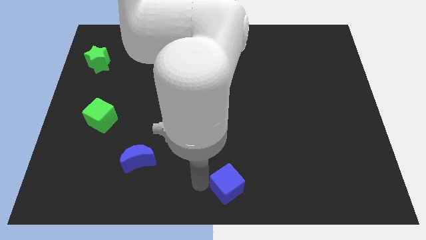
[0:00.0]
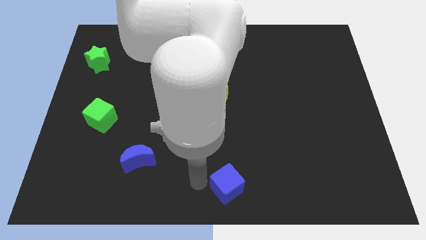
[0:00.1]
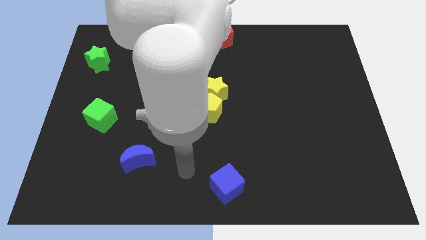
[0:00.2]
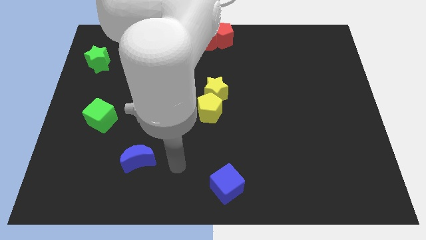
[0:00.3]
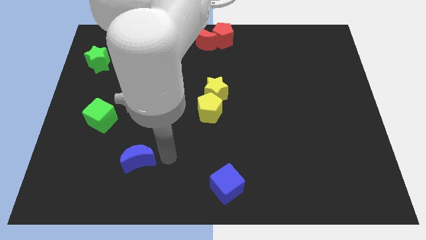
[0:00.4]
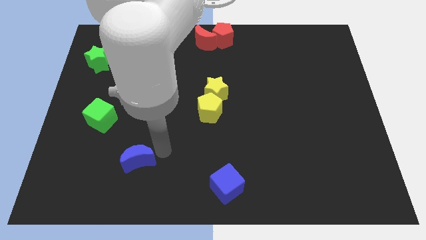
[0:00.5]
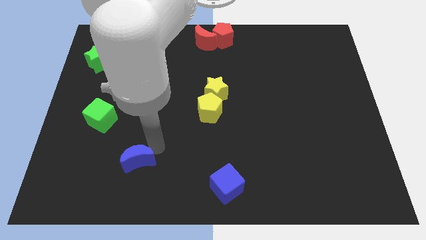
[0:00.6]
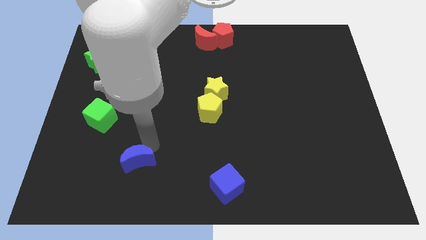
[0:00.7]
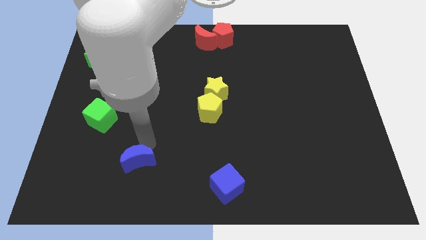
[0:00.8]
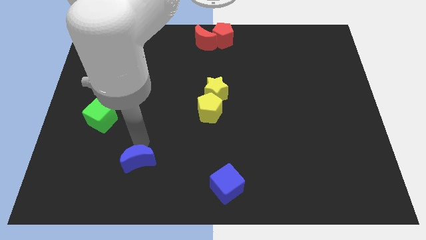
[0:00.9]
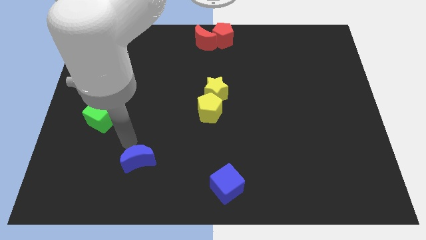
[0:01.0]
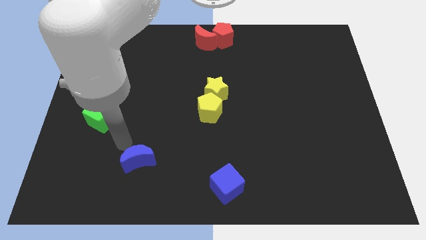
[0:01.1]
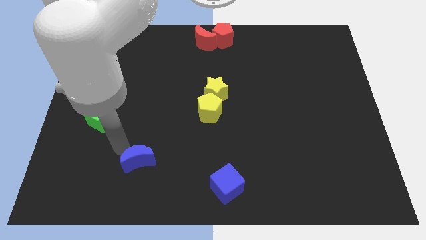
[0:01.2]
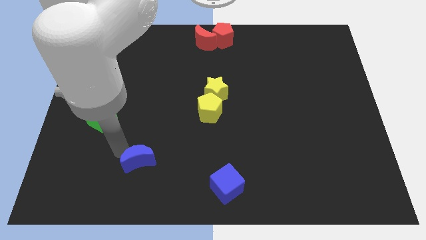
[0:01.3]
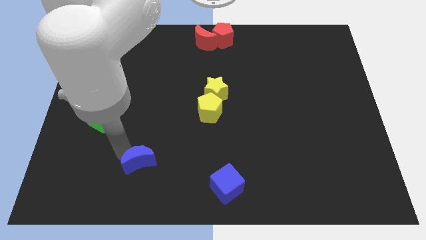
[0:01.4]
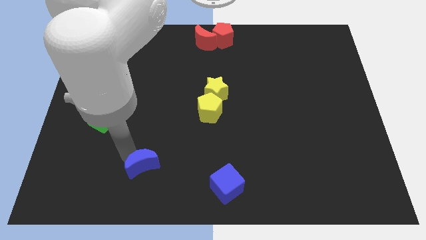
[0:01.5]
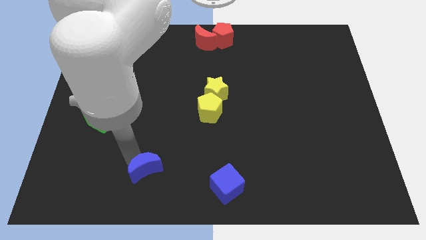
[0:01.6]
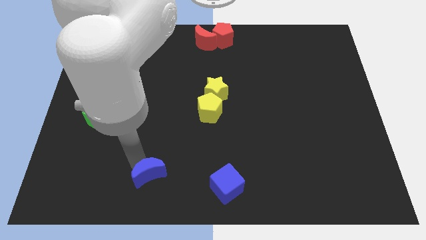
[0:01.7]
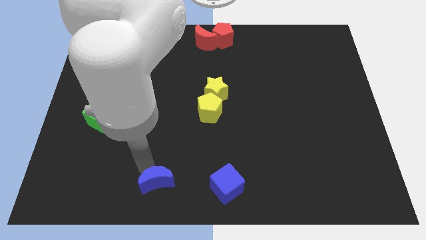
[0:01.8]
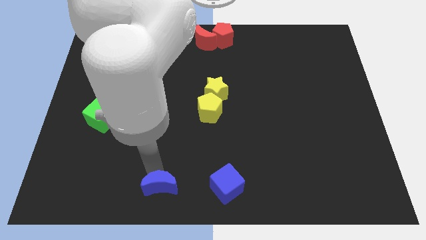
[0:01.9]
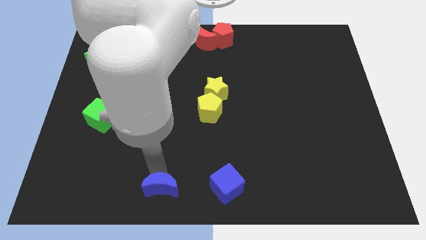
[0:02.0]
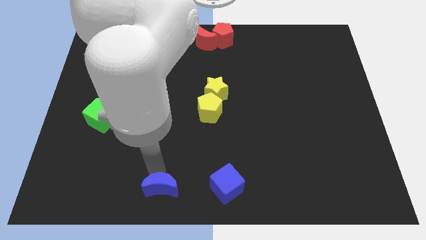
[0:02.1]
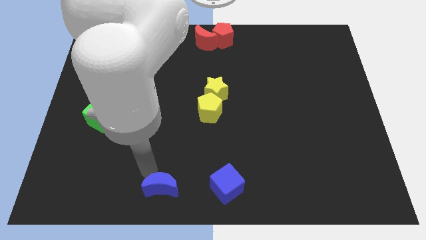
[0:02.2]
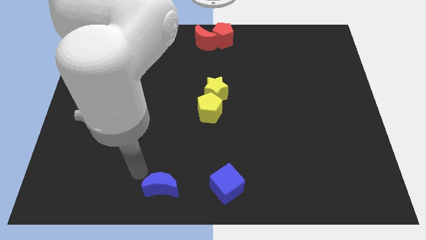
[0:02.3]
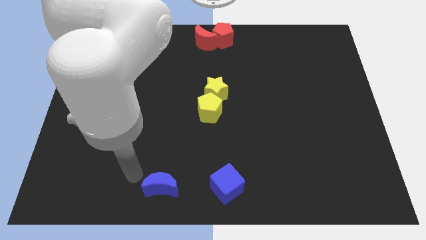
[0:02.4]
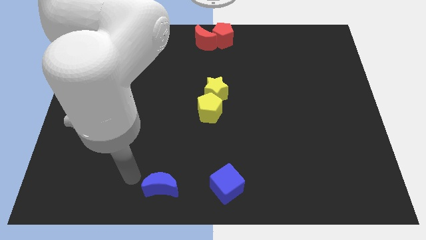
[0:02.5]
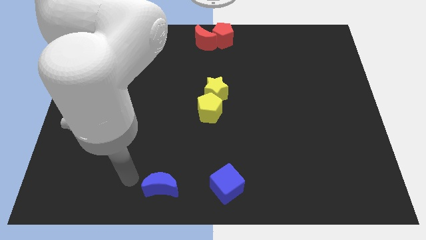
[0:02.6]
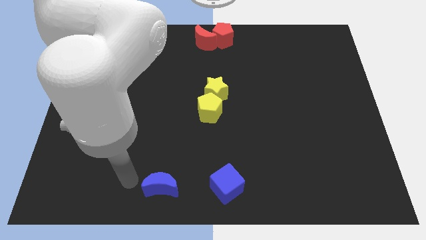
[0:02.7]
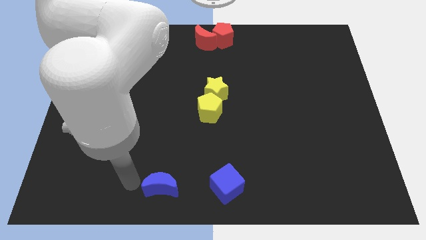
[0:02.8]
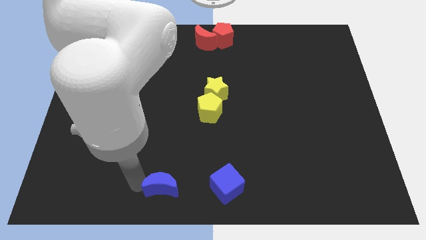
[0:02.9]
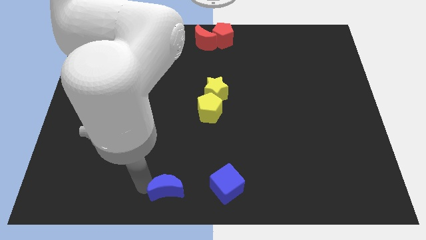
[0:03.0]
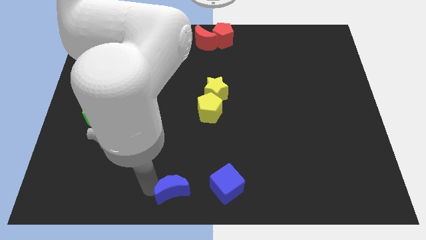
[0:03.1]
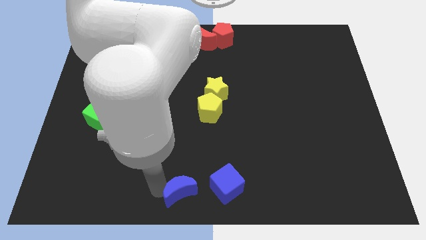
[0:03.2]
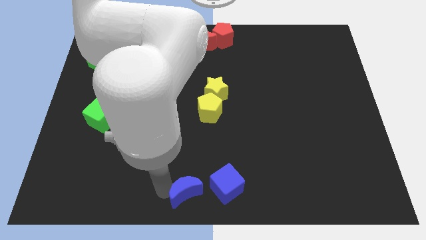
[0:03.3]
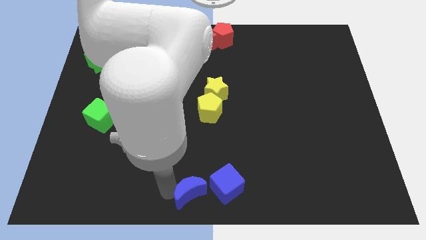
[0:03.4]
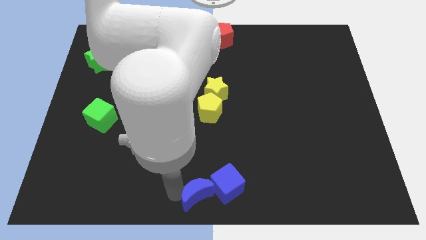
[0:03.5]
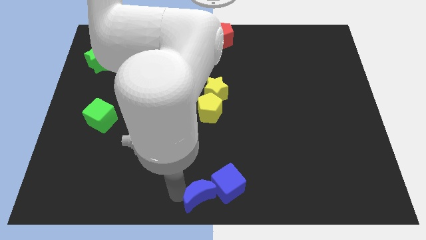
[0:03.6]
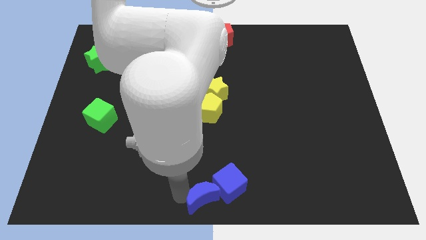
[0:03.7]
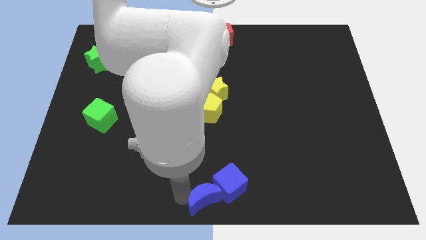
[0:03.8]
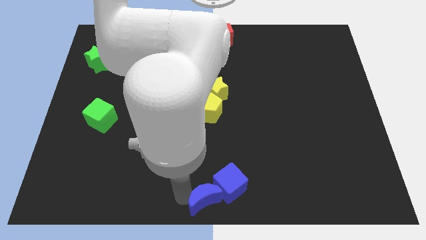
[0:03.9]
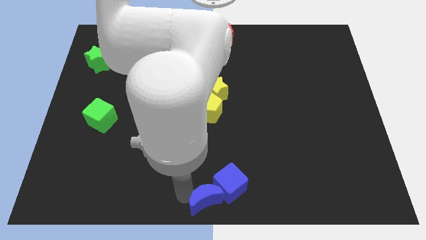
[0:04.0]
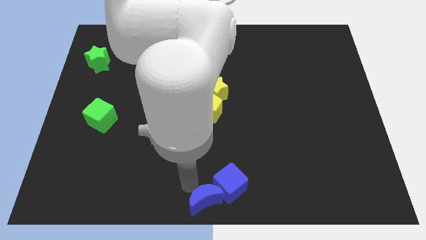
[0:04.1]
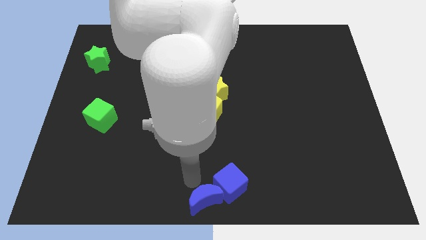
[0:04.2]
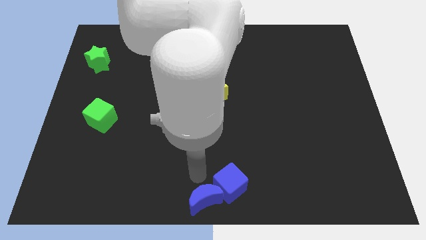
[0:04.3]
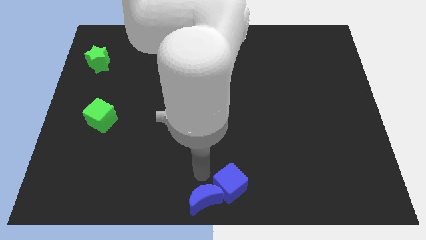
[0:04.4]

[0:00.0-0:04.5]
place blue blocks at the bottom center of the board

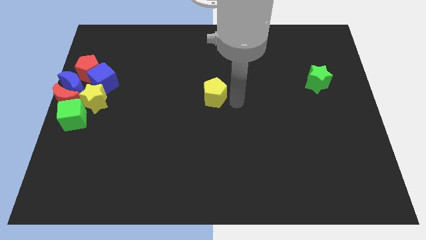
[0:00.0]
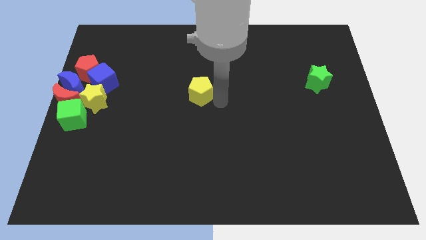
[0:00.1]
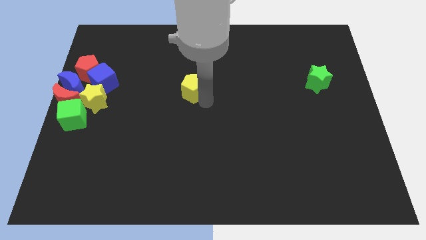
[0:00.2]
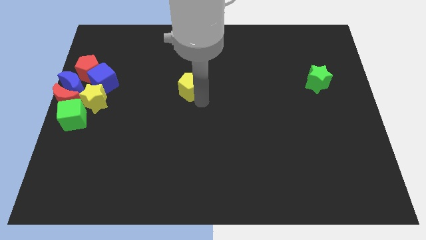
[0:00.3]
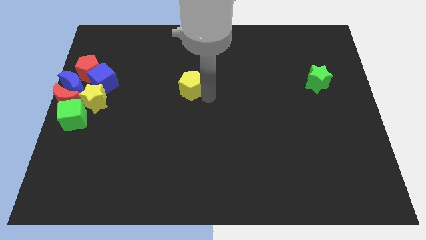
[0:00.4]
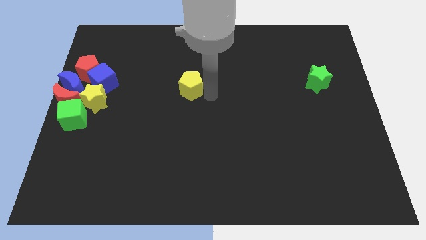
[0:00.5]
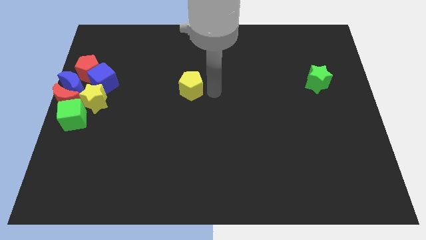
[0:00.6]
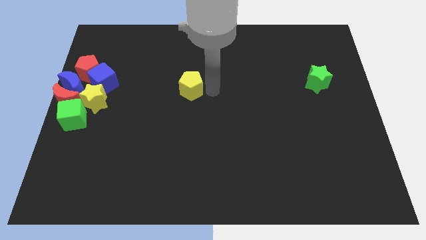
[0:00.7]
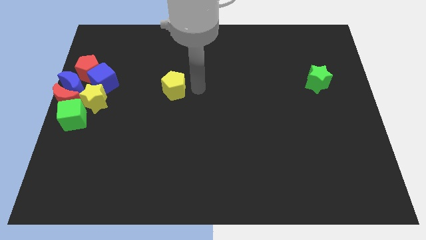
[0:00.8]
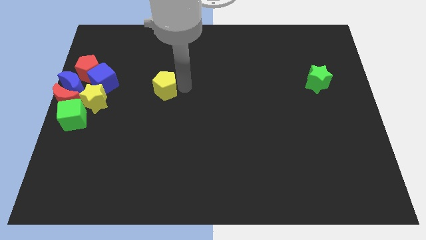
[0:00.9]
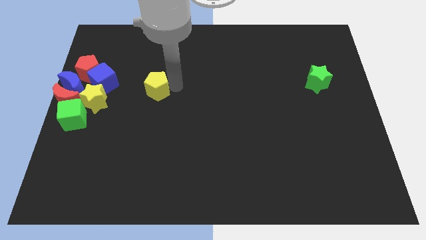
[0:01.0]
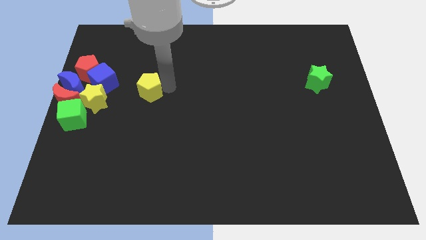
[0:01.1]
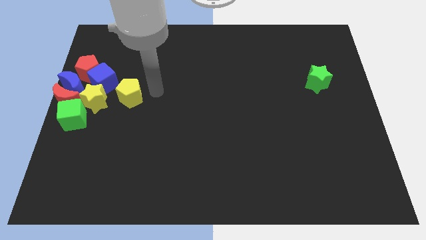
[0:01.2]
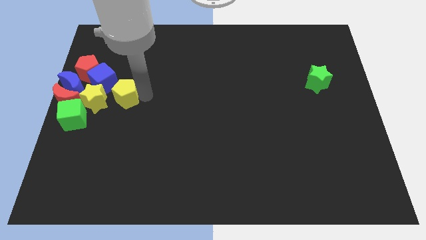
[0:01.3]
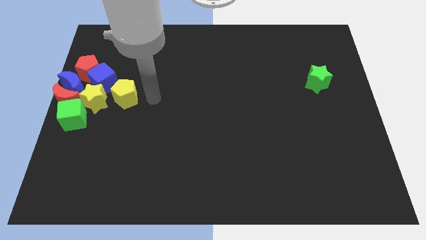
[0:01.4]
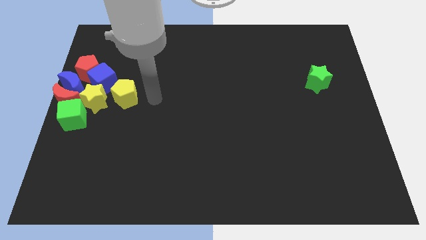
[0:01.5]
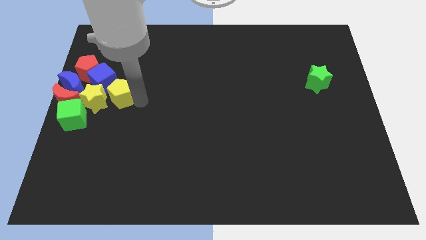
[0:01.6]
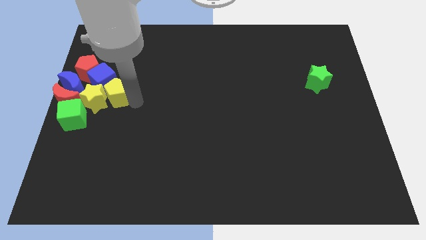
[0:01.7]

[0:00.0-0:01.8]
move the yellow pentagon into the yellow star

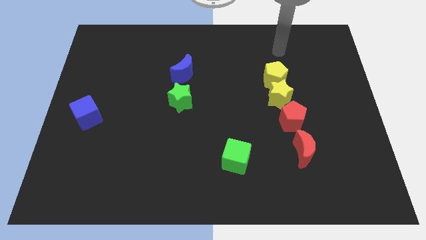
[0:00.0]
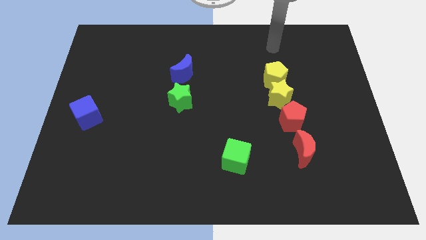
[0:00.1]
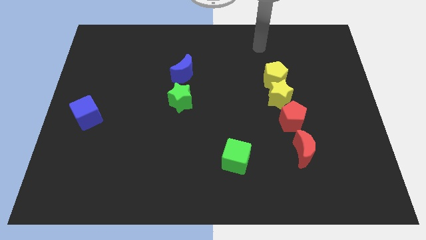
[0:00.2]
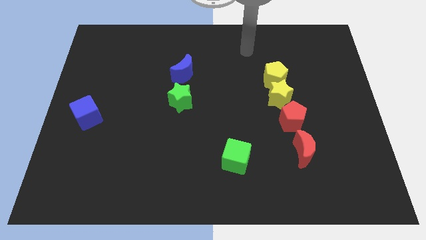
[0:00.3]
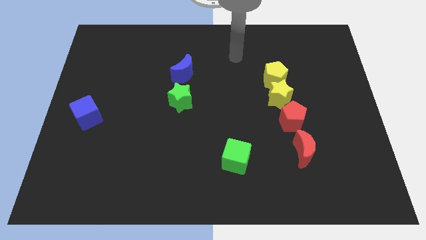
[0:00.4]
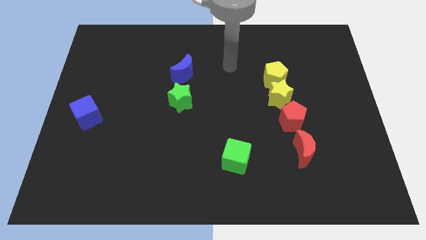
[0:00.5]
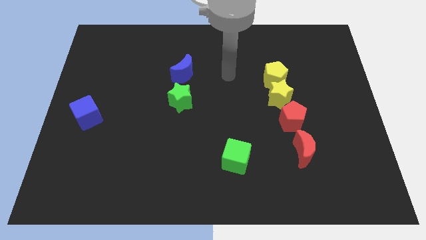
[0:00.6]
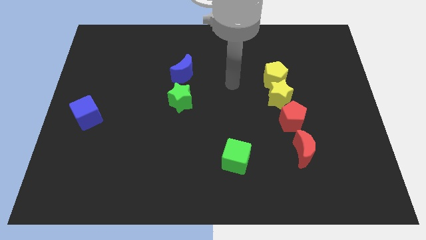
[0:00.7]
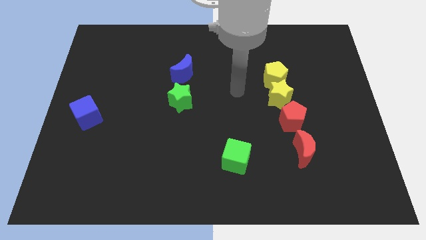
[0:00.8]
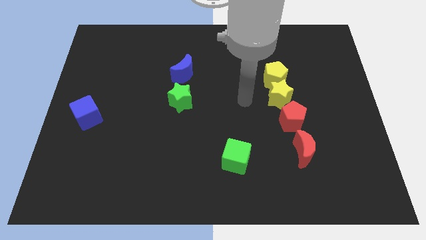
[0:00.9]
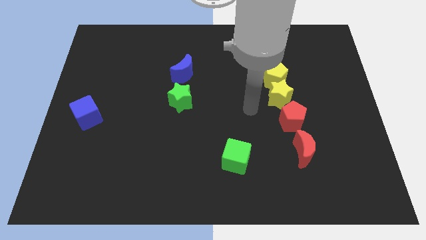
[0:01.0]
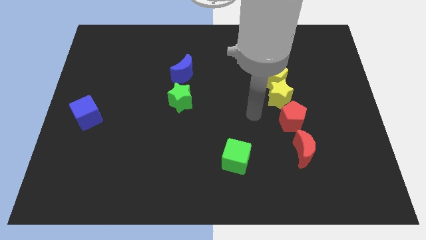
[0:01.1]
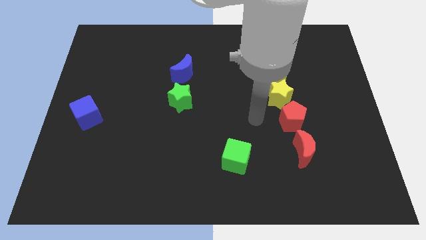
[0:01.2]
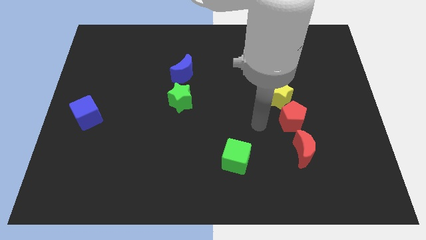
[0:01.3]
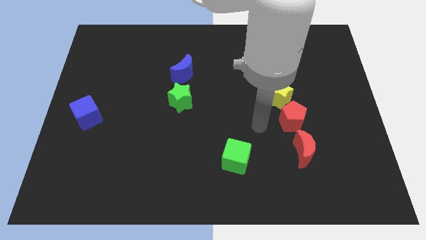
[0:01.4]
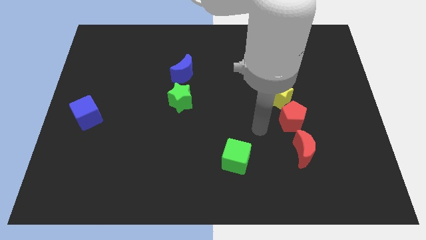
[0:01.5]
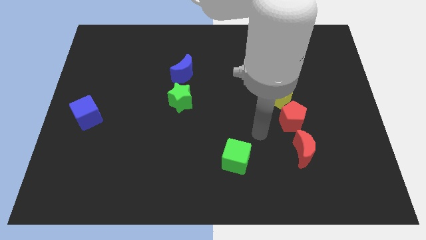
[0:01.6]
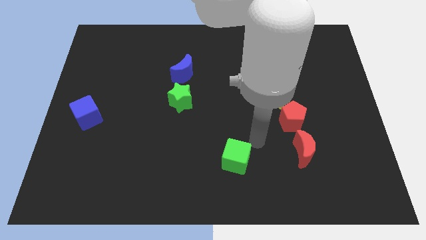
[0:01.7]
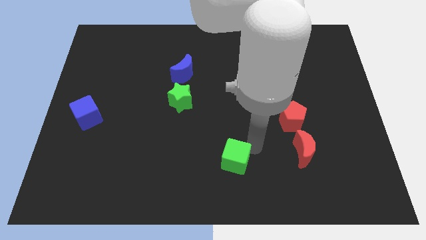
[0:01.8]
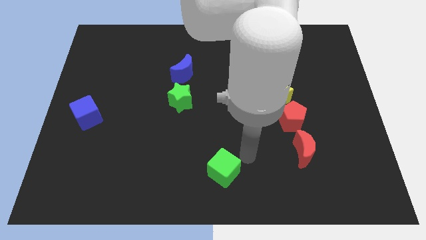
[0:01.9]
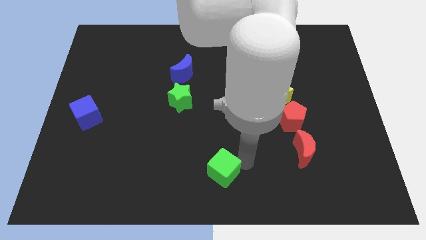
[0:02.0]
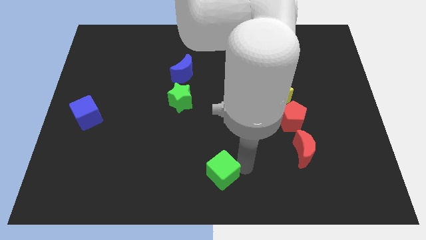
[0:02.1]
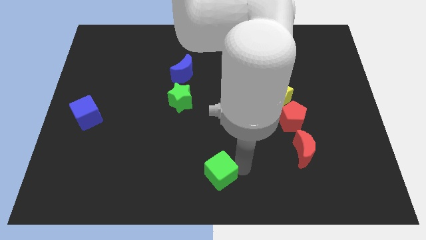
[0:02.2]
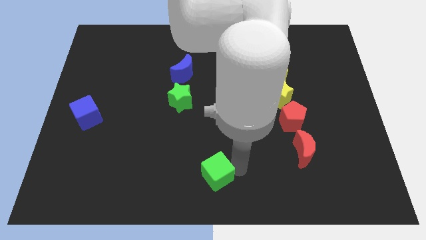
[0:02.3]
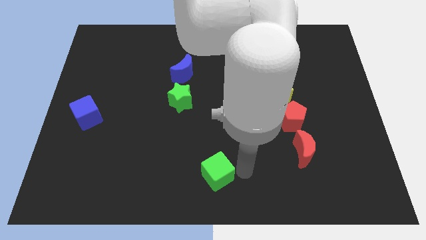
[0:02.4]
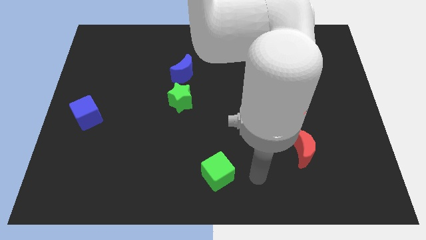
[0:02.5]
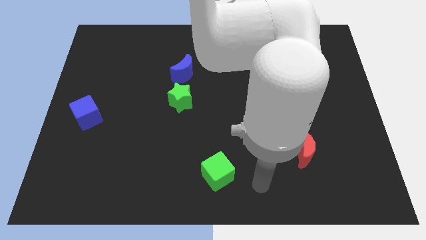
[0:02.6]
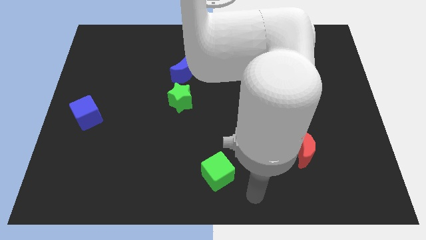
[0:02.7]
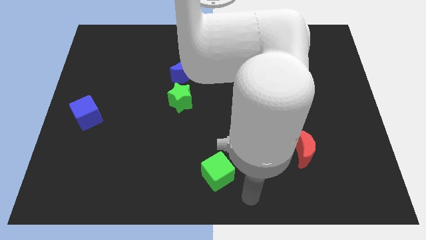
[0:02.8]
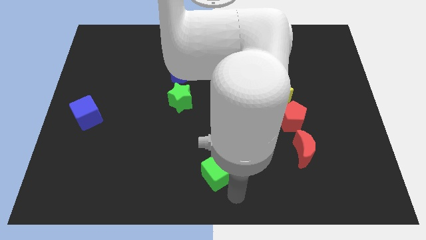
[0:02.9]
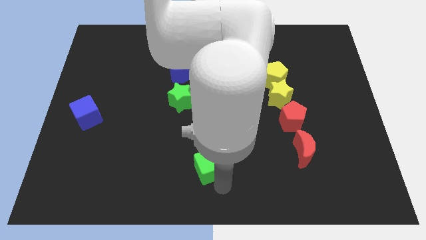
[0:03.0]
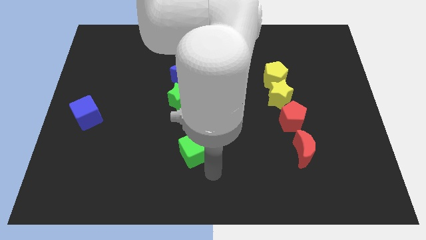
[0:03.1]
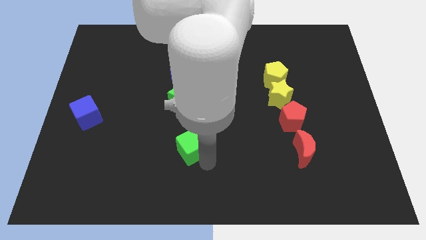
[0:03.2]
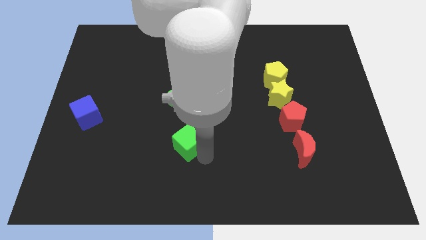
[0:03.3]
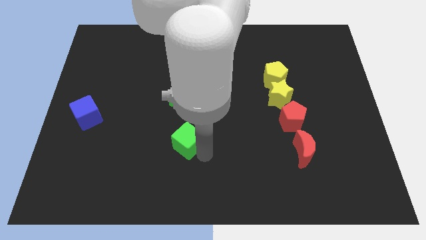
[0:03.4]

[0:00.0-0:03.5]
move the green cube below the green star
